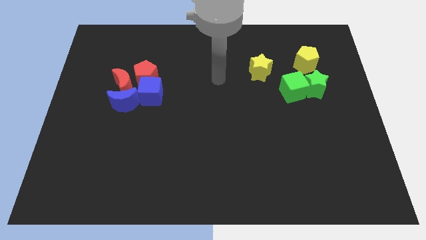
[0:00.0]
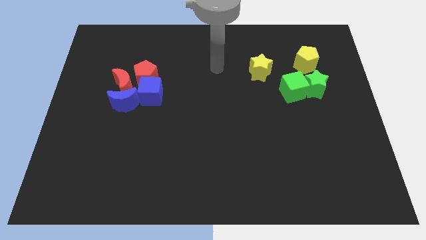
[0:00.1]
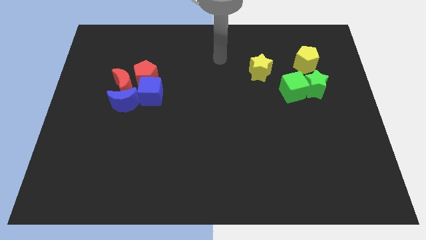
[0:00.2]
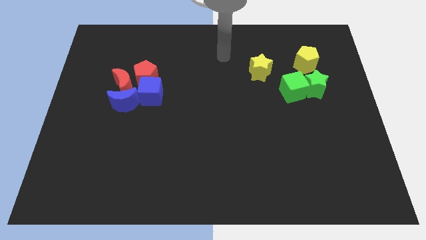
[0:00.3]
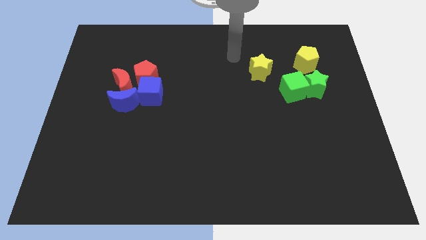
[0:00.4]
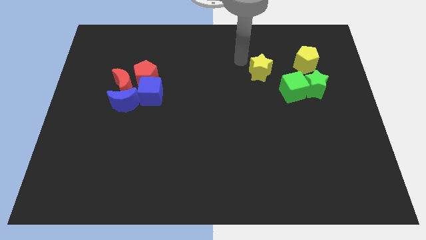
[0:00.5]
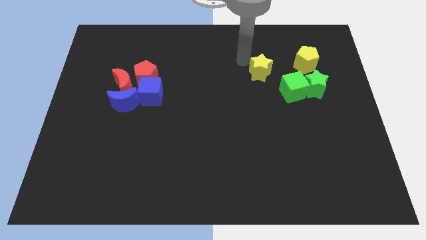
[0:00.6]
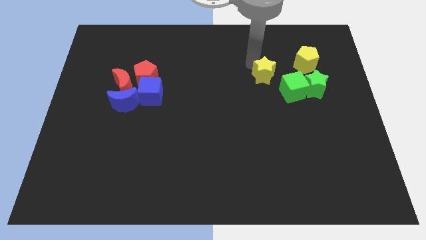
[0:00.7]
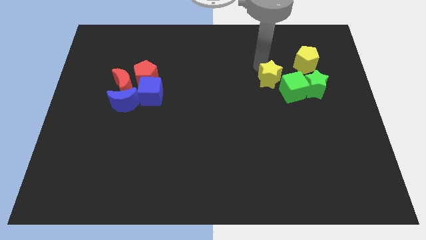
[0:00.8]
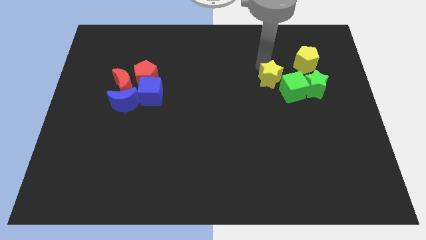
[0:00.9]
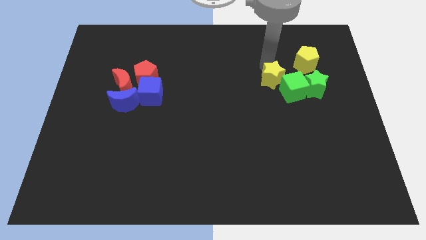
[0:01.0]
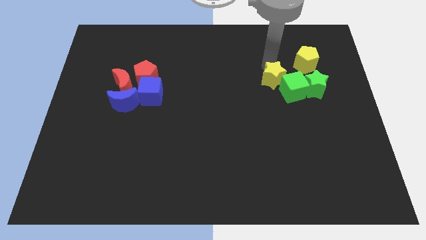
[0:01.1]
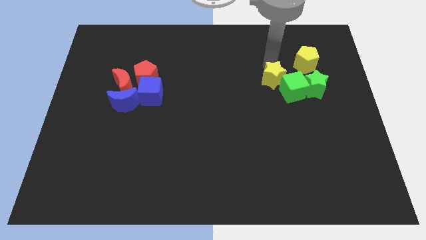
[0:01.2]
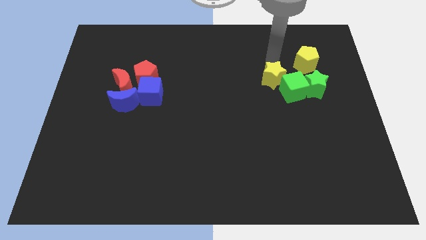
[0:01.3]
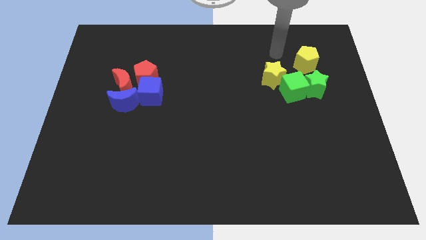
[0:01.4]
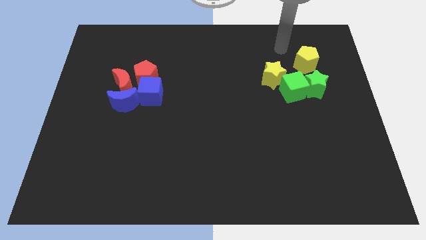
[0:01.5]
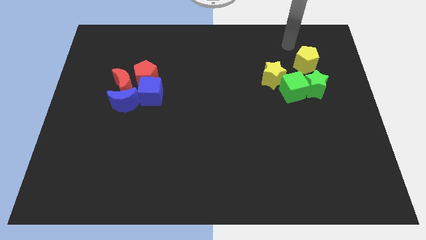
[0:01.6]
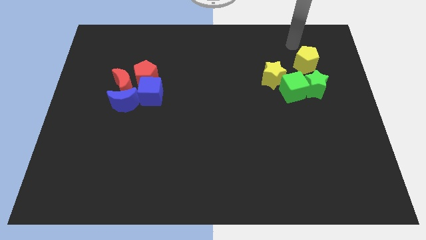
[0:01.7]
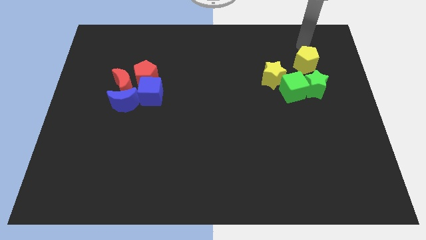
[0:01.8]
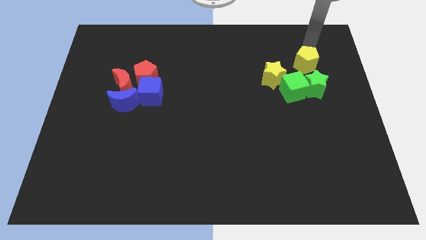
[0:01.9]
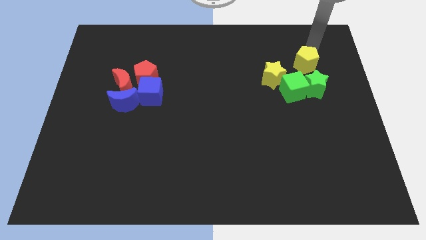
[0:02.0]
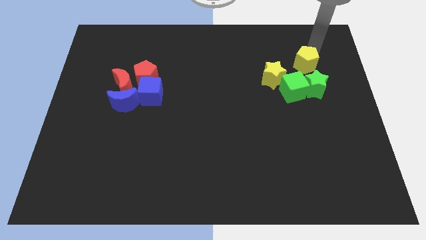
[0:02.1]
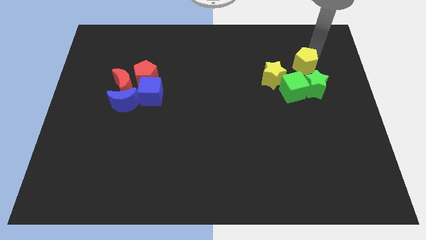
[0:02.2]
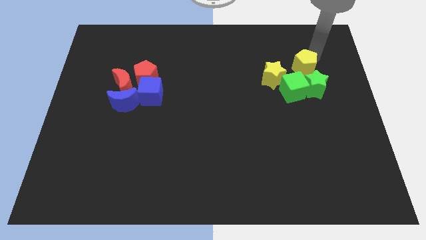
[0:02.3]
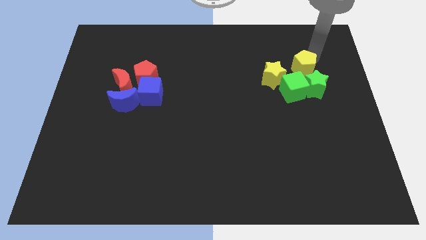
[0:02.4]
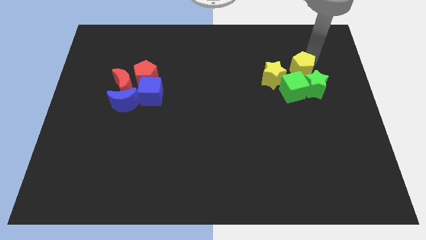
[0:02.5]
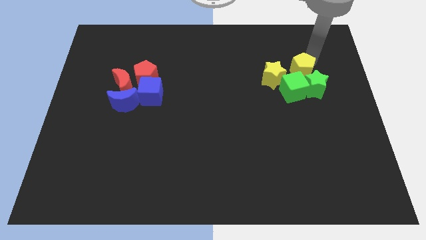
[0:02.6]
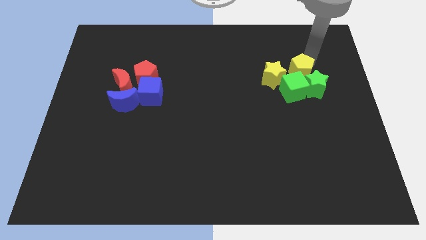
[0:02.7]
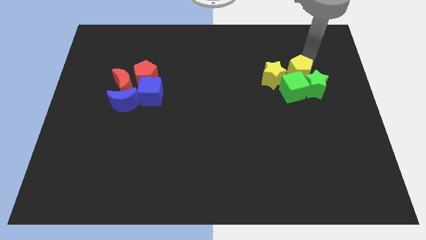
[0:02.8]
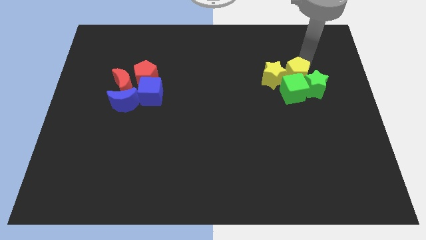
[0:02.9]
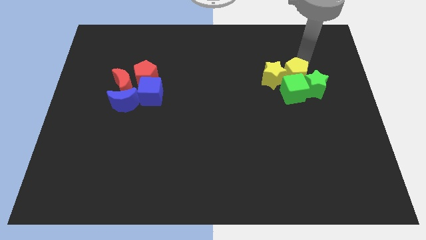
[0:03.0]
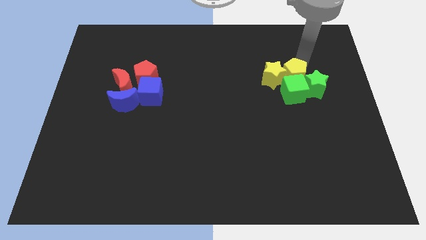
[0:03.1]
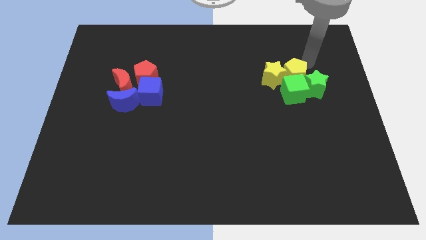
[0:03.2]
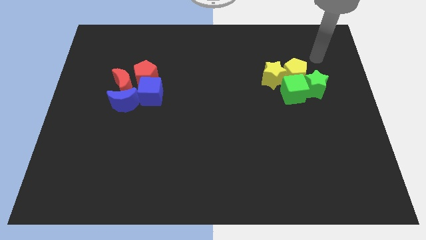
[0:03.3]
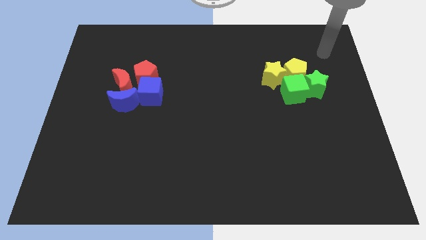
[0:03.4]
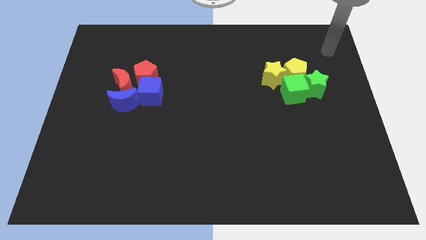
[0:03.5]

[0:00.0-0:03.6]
slide yellow blocks into green cube

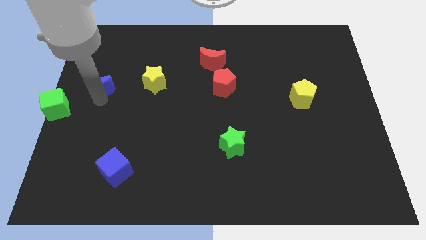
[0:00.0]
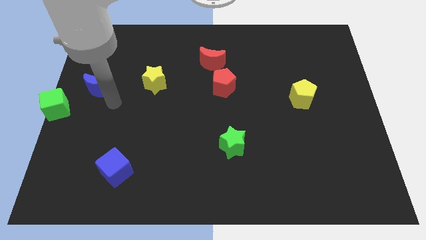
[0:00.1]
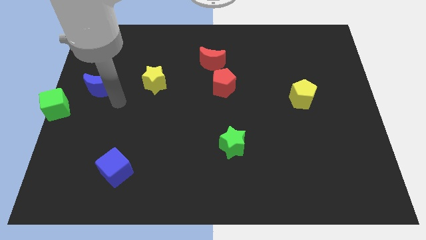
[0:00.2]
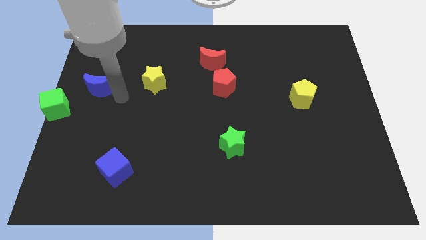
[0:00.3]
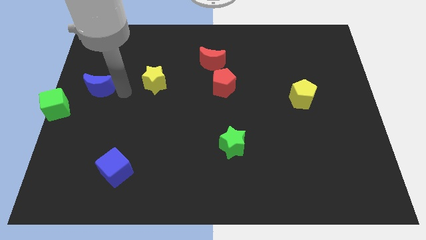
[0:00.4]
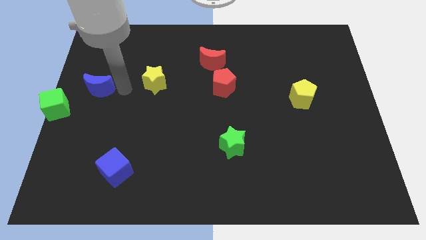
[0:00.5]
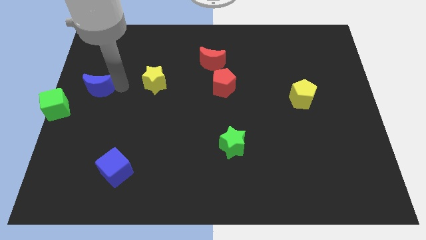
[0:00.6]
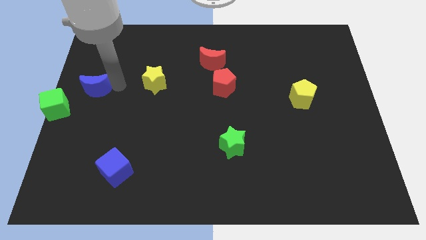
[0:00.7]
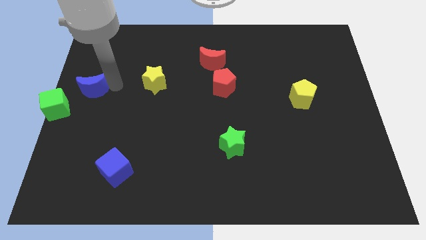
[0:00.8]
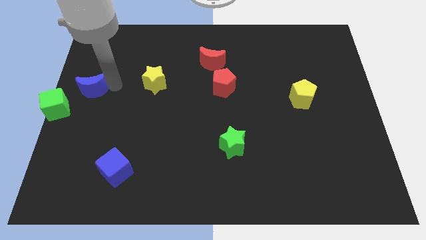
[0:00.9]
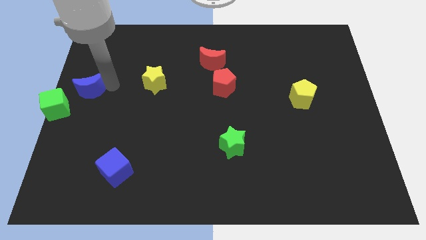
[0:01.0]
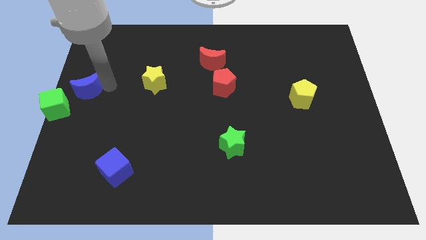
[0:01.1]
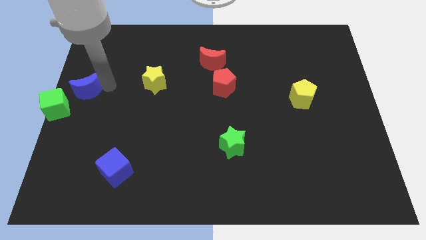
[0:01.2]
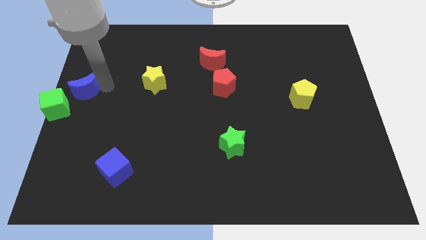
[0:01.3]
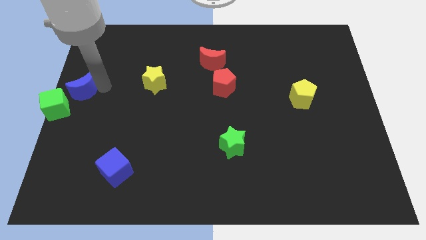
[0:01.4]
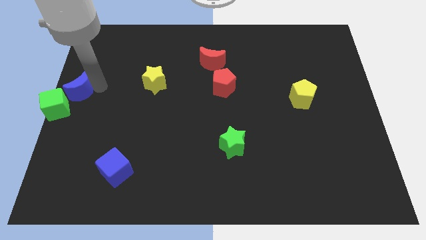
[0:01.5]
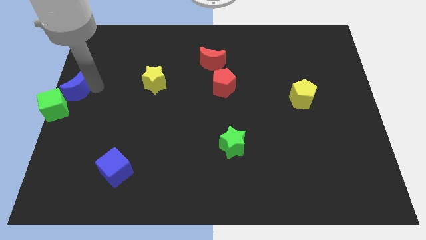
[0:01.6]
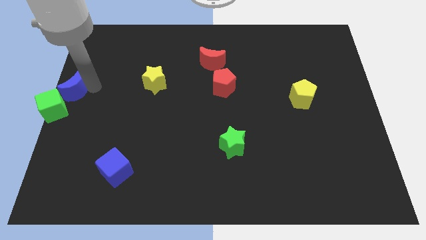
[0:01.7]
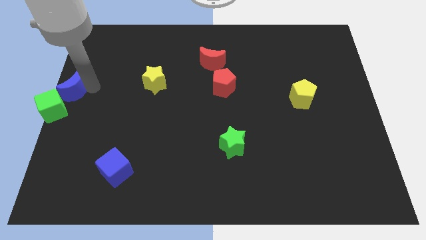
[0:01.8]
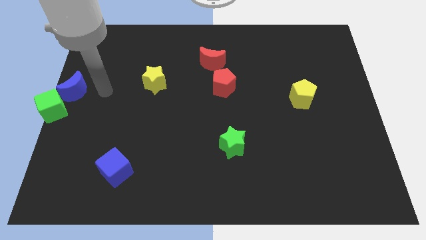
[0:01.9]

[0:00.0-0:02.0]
push the blue crescent to the top of the green cube

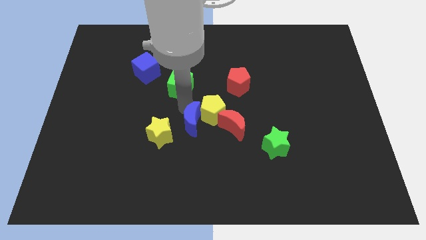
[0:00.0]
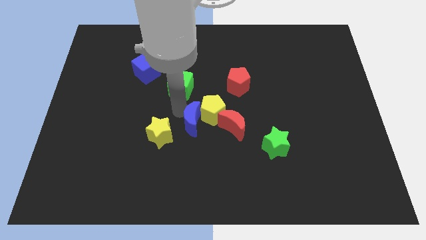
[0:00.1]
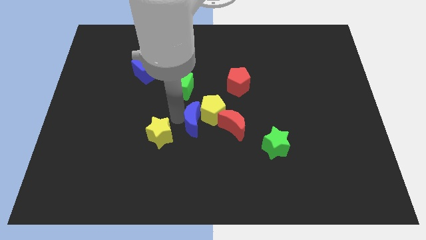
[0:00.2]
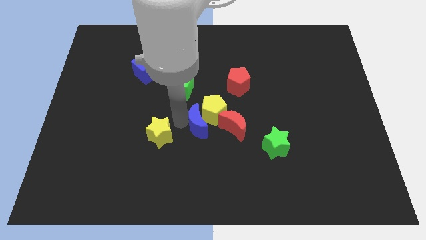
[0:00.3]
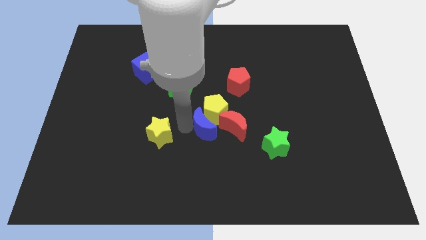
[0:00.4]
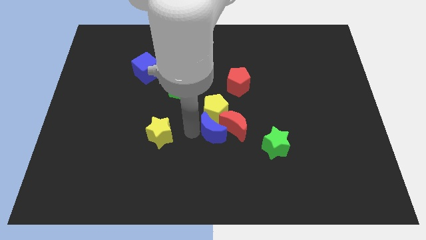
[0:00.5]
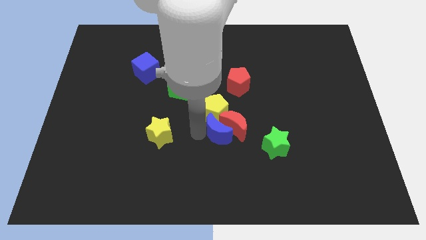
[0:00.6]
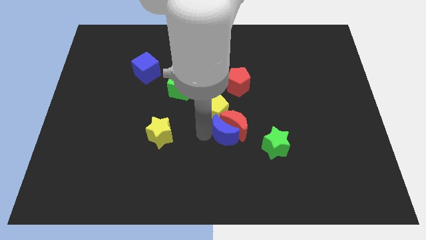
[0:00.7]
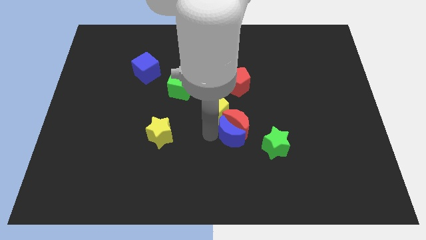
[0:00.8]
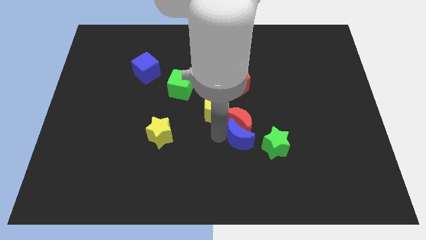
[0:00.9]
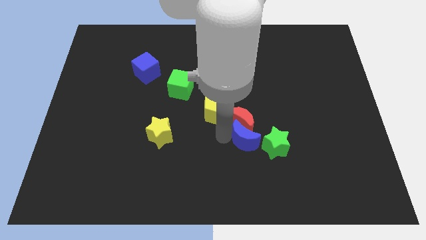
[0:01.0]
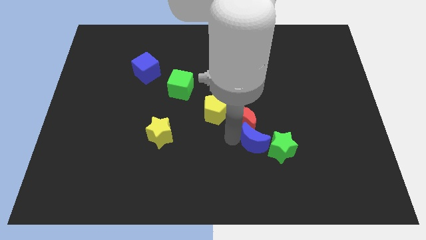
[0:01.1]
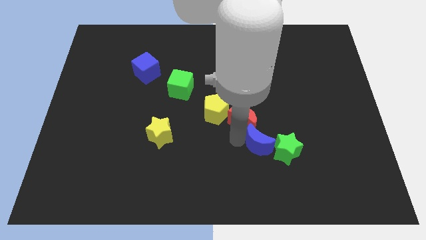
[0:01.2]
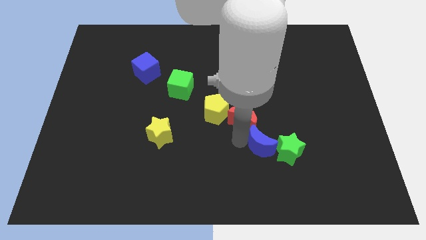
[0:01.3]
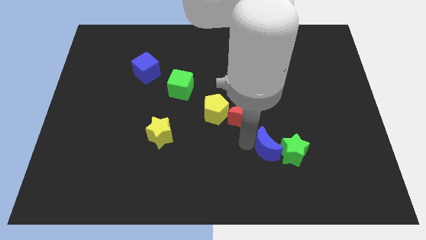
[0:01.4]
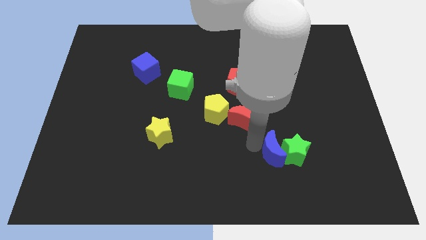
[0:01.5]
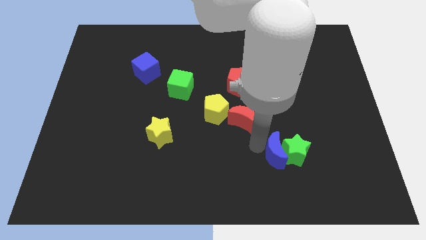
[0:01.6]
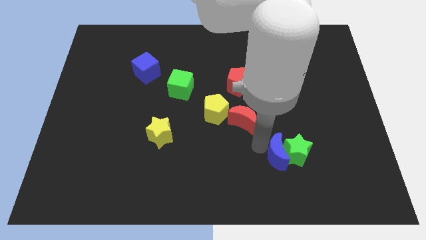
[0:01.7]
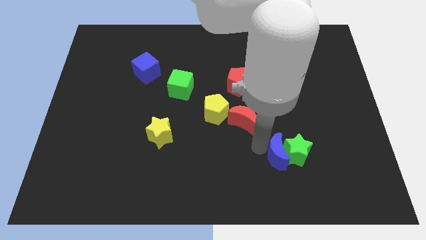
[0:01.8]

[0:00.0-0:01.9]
push the blue moon into the green star

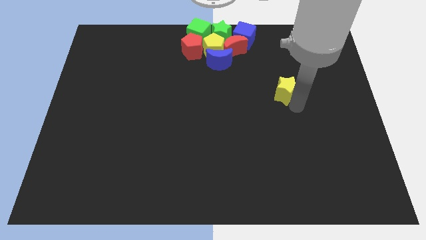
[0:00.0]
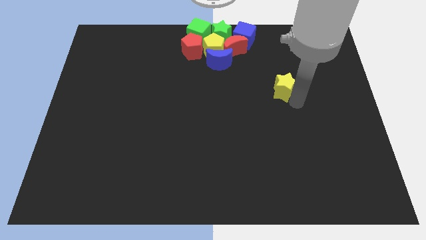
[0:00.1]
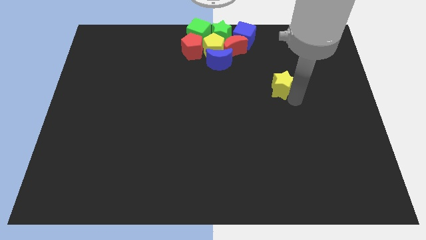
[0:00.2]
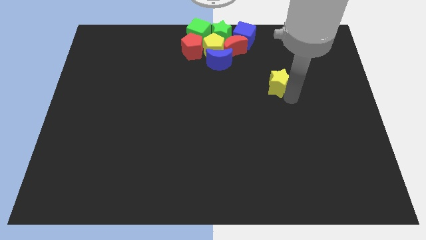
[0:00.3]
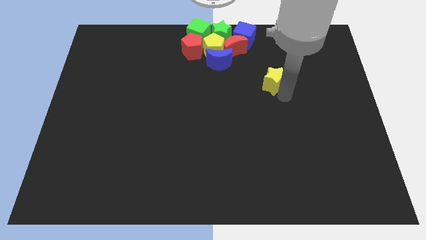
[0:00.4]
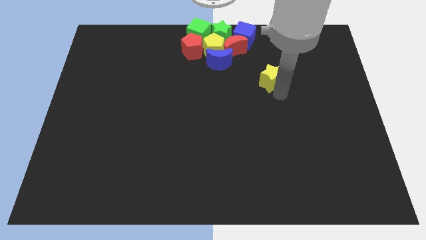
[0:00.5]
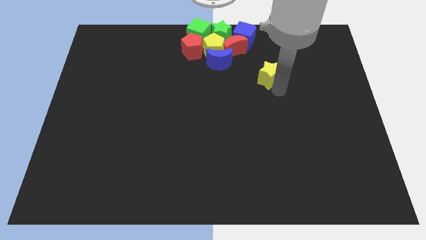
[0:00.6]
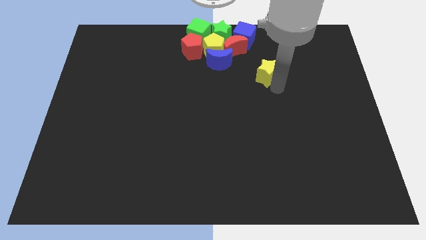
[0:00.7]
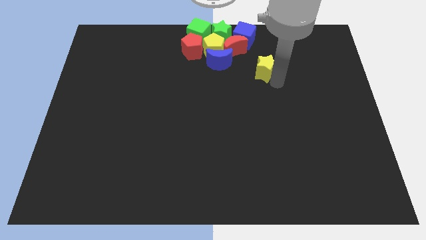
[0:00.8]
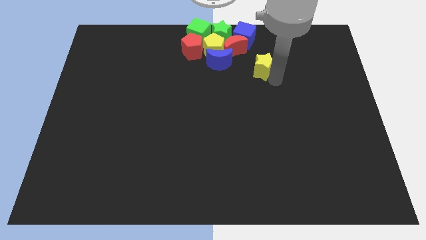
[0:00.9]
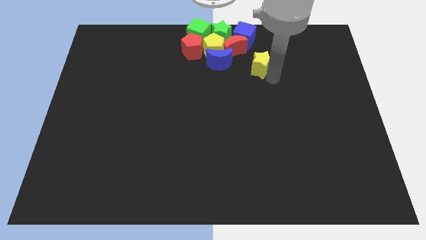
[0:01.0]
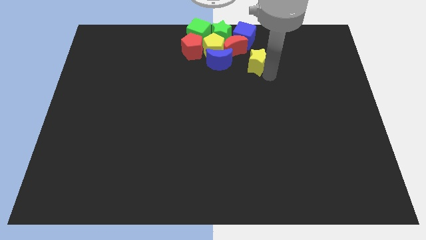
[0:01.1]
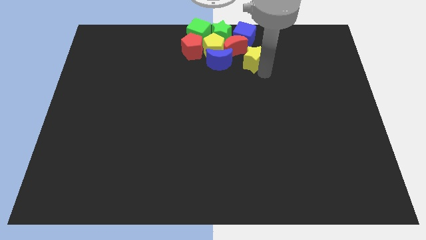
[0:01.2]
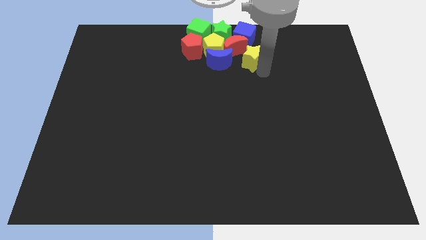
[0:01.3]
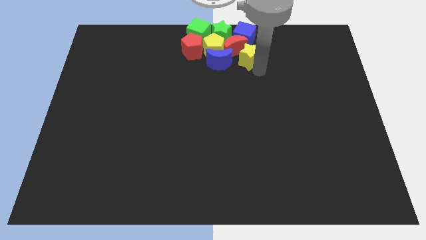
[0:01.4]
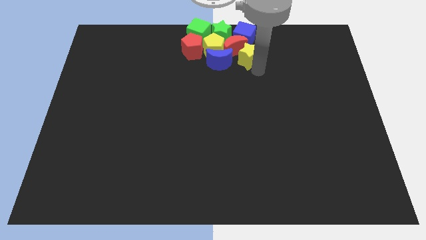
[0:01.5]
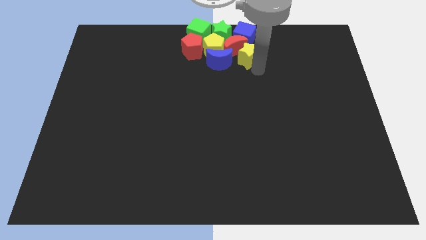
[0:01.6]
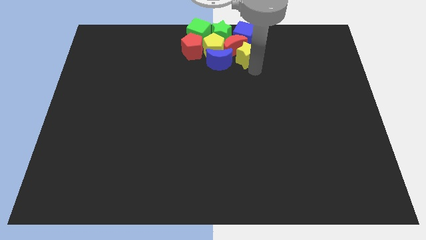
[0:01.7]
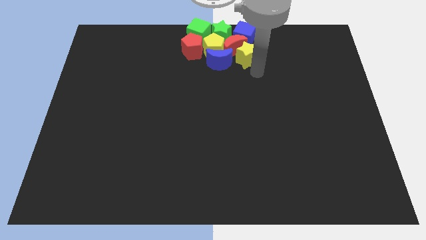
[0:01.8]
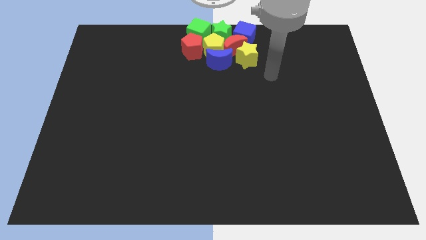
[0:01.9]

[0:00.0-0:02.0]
move the yellow star into the red crescent
